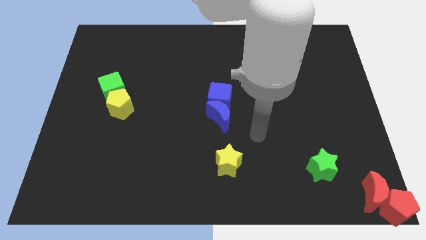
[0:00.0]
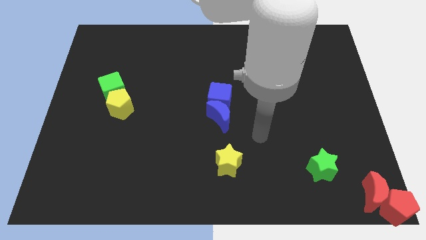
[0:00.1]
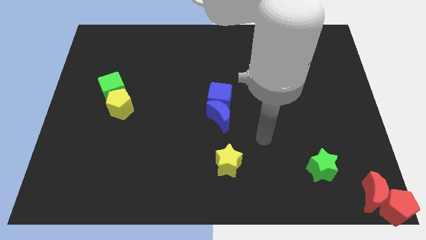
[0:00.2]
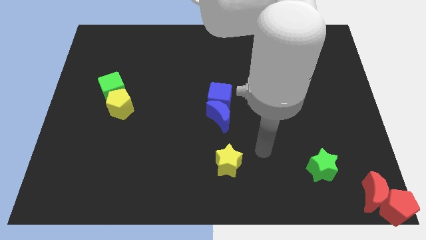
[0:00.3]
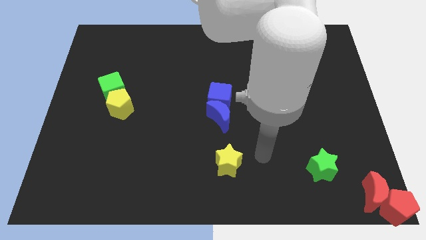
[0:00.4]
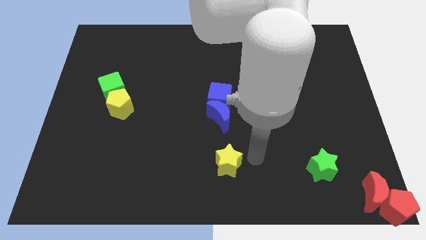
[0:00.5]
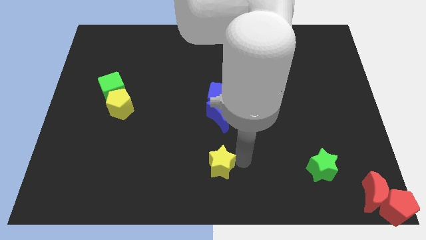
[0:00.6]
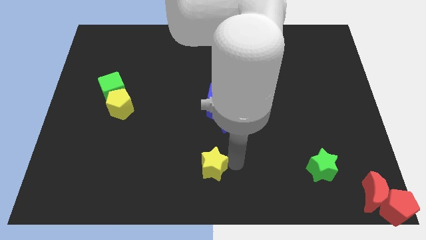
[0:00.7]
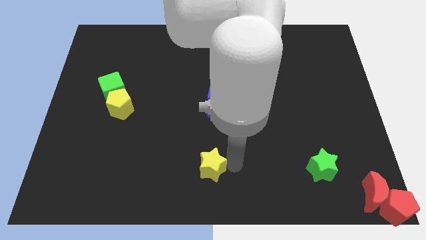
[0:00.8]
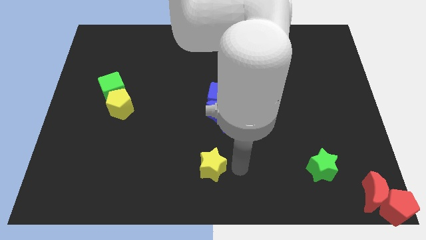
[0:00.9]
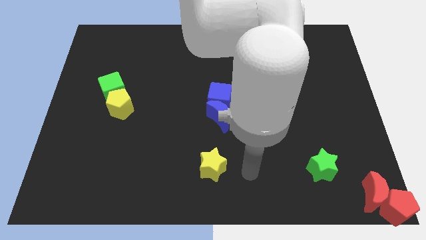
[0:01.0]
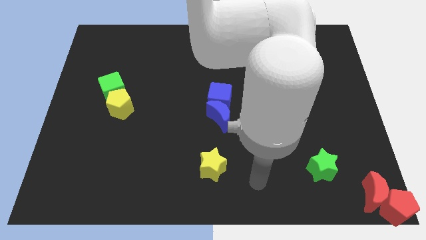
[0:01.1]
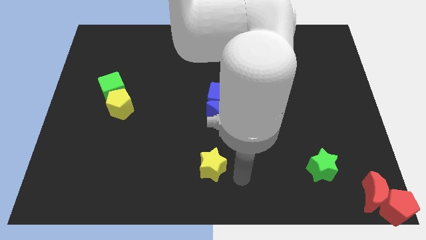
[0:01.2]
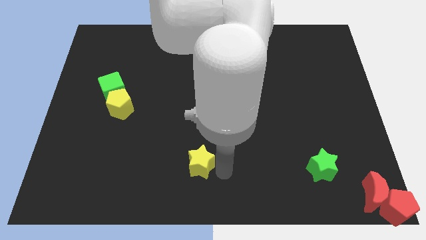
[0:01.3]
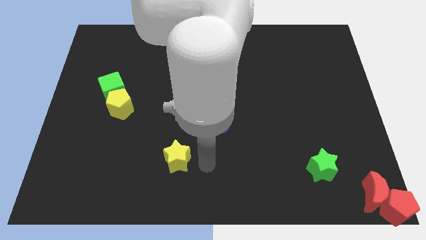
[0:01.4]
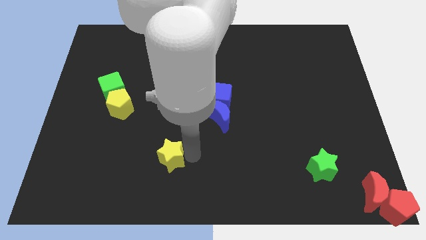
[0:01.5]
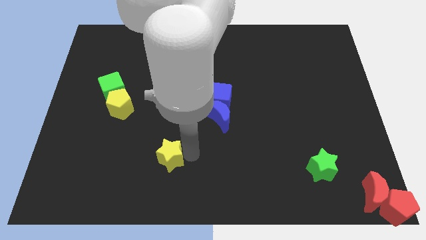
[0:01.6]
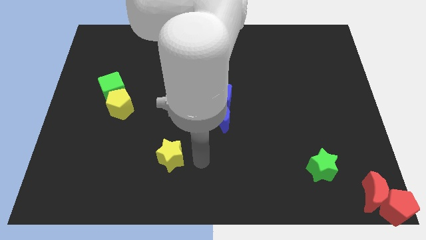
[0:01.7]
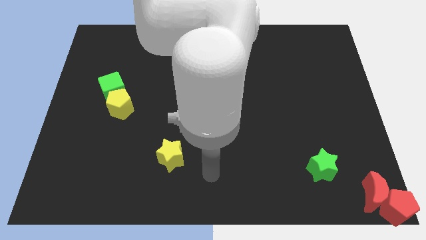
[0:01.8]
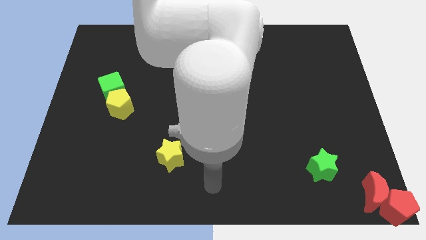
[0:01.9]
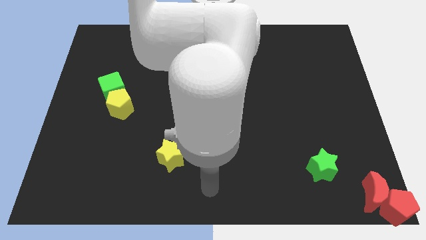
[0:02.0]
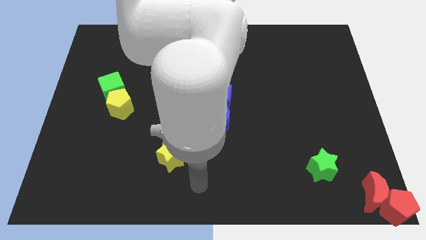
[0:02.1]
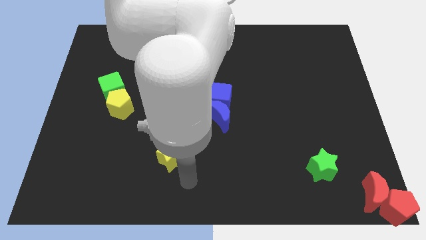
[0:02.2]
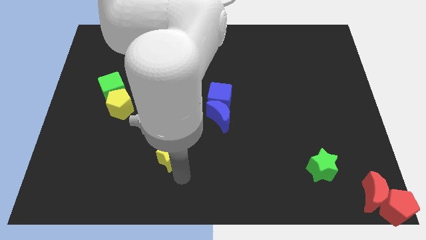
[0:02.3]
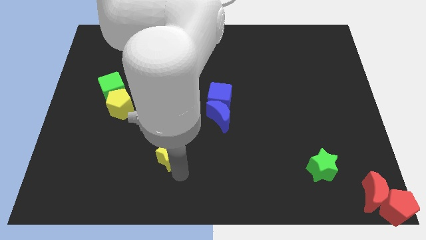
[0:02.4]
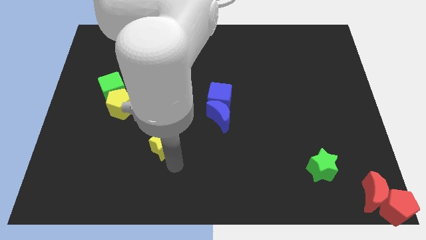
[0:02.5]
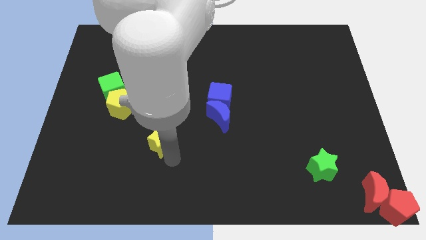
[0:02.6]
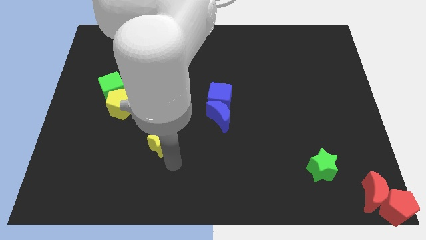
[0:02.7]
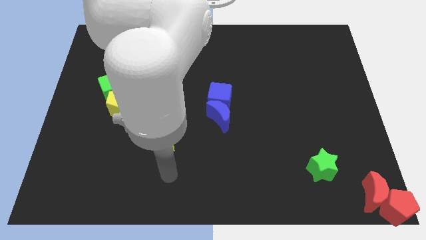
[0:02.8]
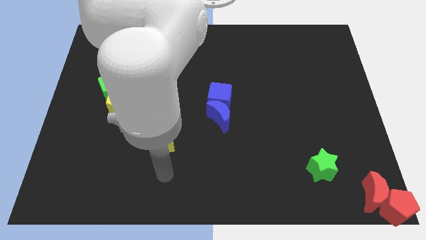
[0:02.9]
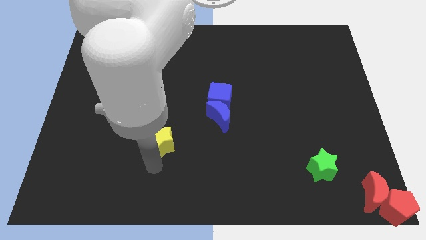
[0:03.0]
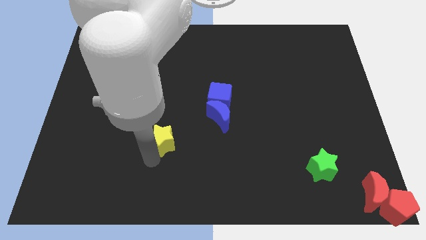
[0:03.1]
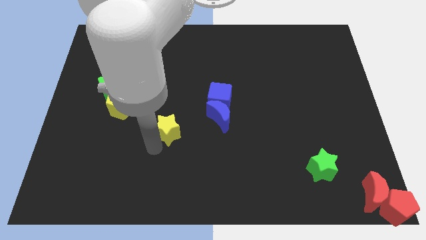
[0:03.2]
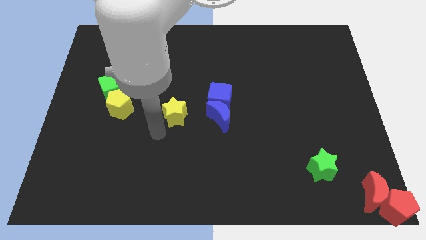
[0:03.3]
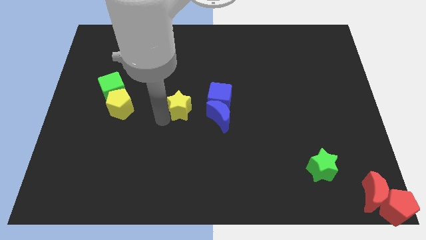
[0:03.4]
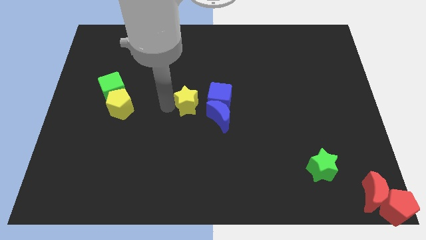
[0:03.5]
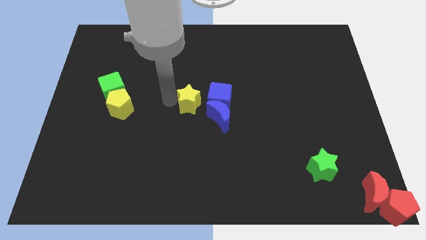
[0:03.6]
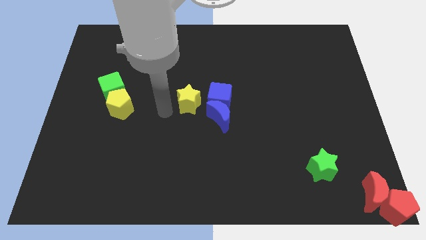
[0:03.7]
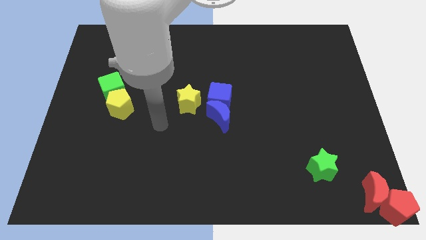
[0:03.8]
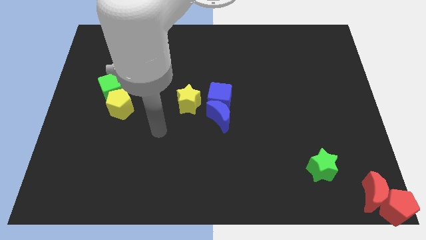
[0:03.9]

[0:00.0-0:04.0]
move the yellow star to the left side of the blue cube

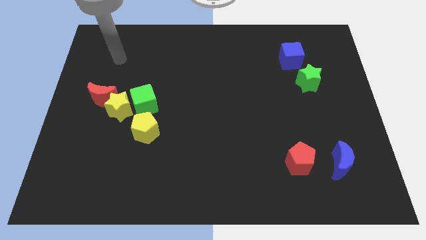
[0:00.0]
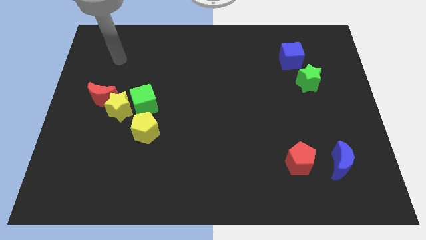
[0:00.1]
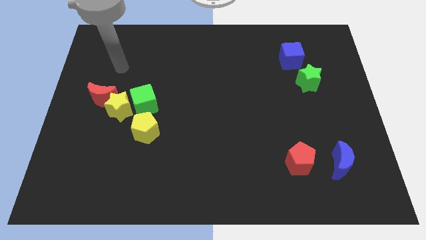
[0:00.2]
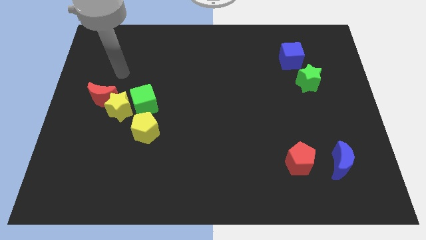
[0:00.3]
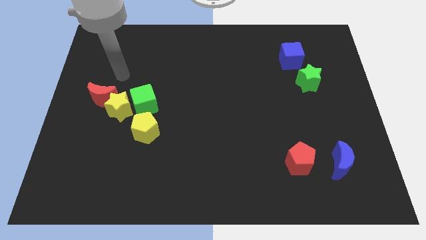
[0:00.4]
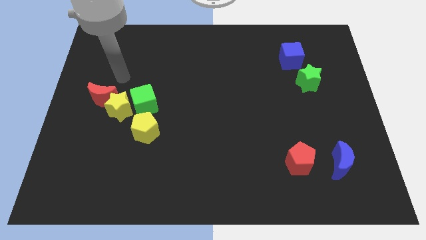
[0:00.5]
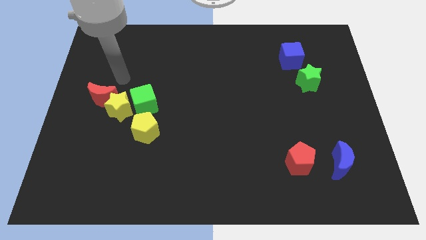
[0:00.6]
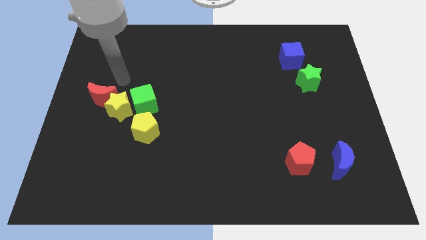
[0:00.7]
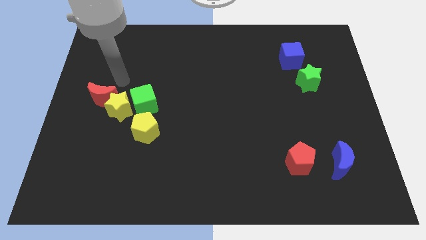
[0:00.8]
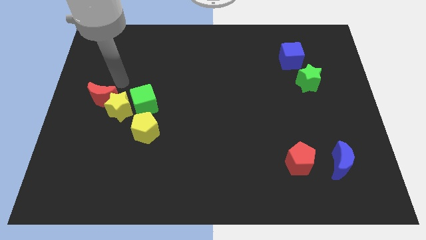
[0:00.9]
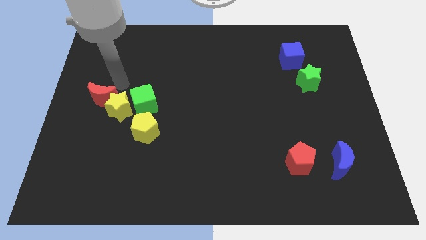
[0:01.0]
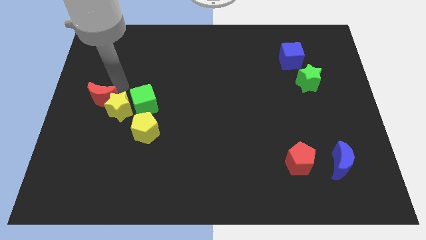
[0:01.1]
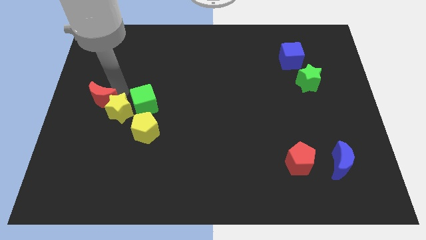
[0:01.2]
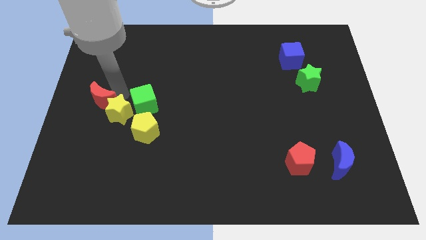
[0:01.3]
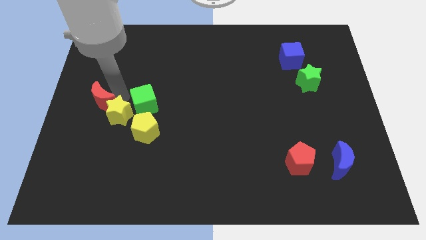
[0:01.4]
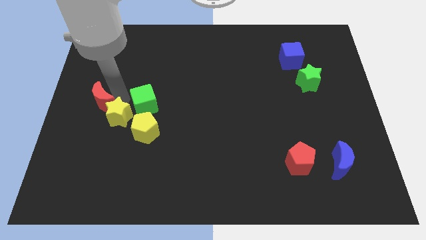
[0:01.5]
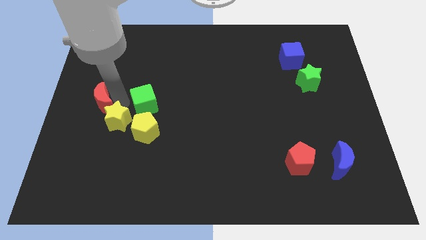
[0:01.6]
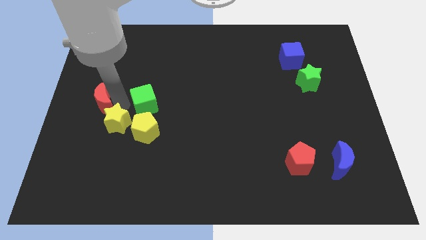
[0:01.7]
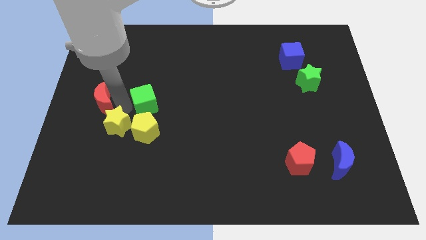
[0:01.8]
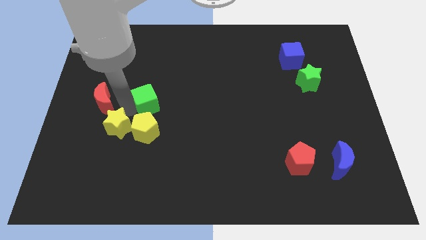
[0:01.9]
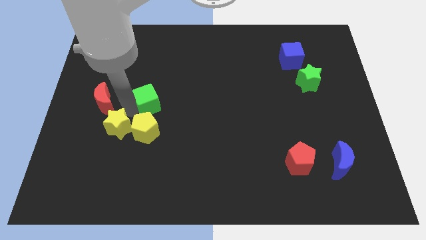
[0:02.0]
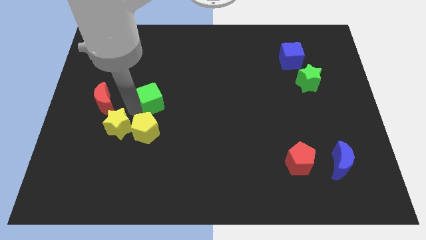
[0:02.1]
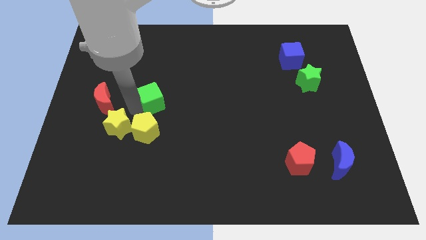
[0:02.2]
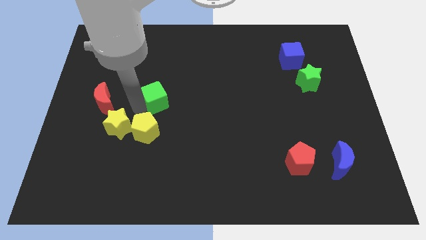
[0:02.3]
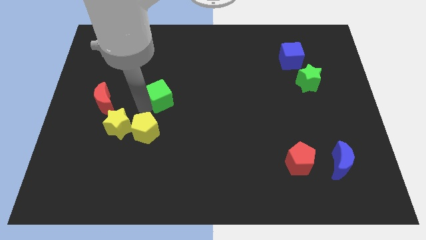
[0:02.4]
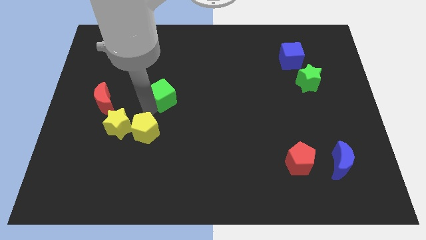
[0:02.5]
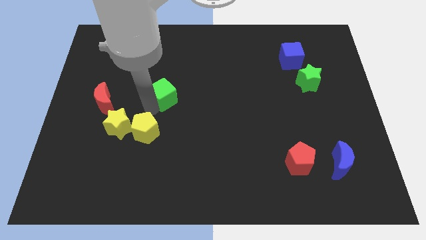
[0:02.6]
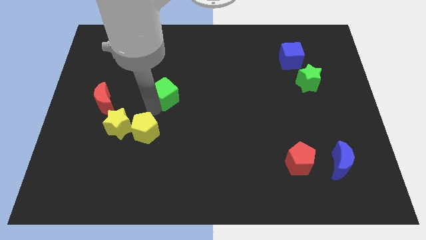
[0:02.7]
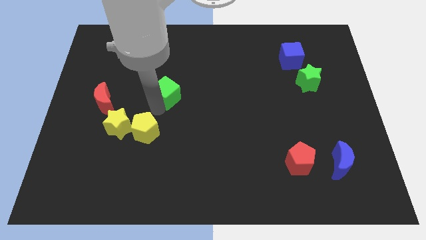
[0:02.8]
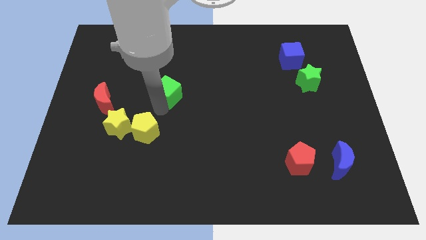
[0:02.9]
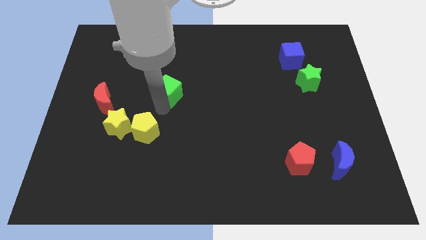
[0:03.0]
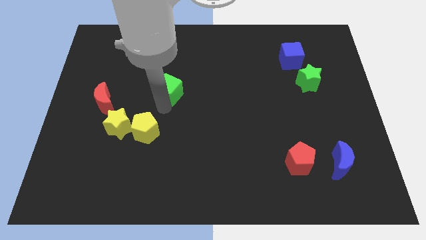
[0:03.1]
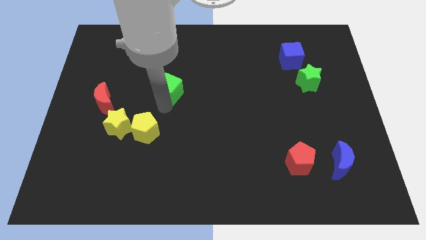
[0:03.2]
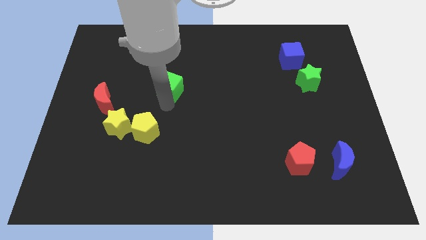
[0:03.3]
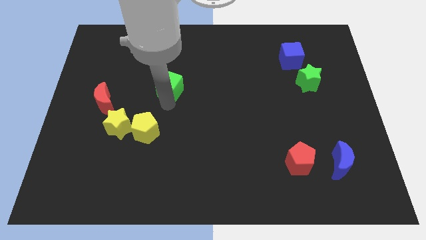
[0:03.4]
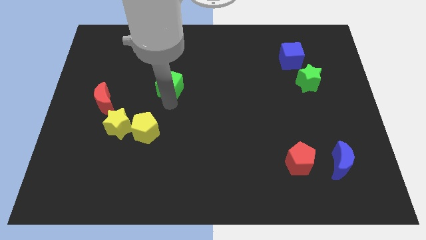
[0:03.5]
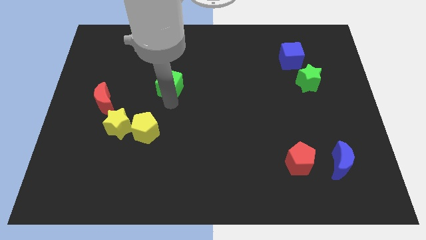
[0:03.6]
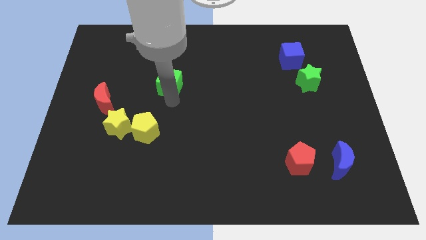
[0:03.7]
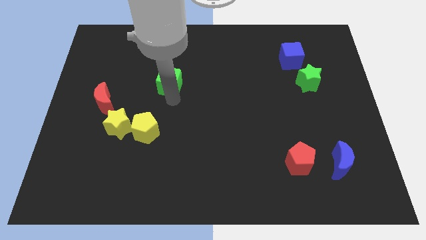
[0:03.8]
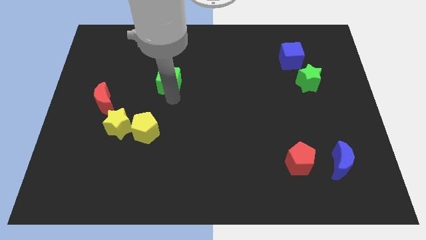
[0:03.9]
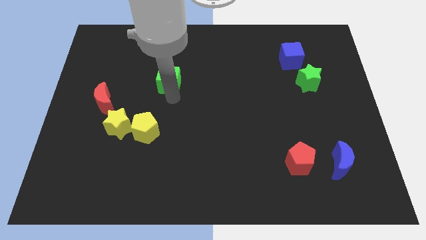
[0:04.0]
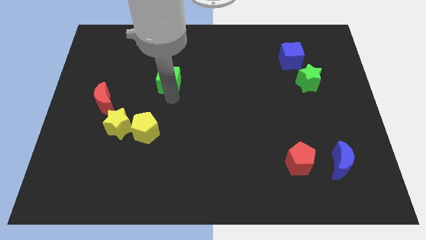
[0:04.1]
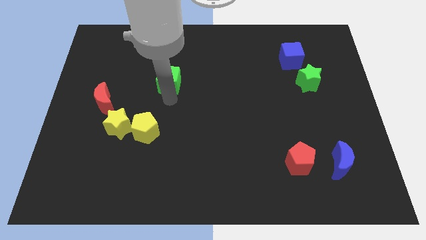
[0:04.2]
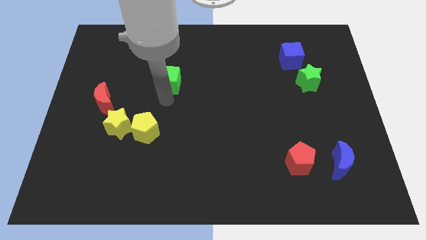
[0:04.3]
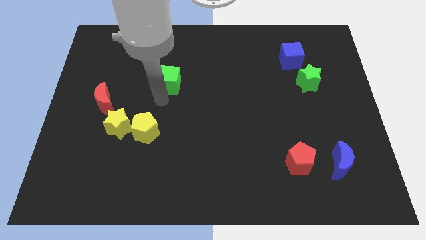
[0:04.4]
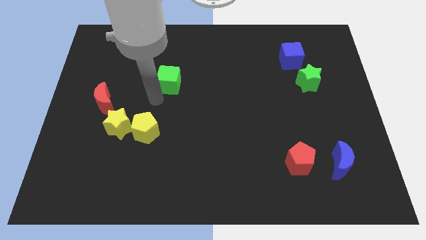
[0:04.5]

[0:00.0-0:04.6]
move the green cube diagonally to red pentagon

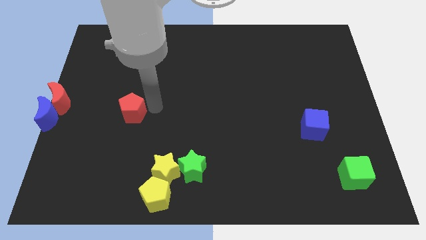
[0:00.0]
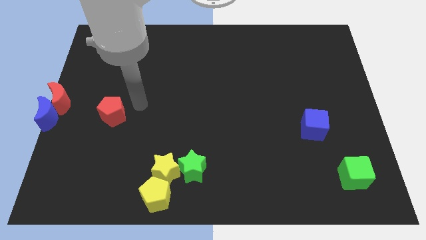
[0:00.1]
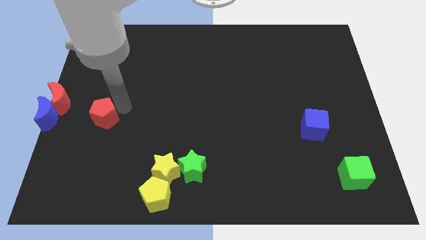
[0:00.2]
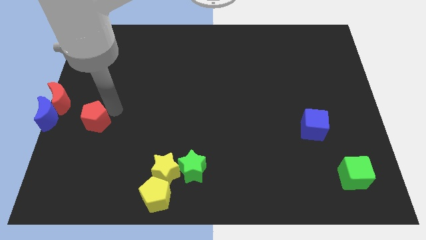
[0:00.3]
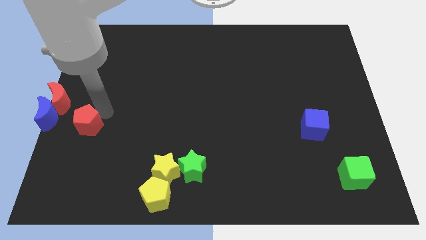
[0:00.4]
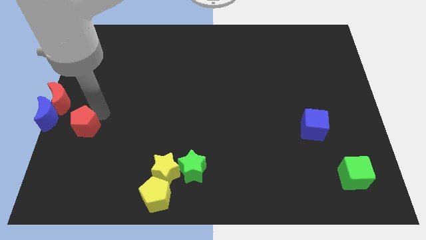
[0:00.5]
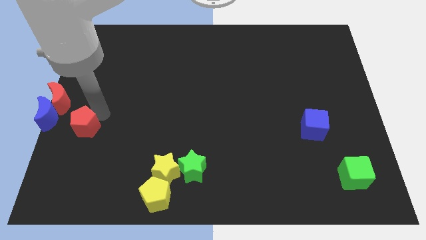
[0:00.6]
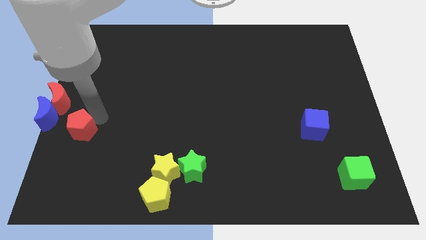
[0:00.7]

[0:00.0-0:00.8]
push the red pentagon to the right of the blue crescent
